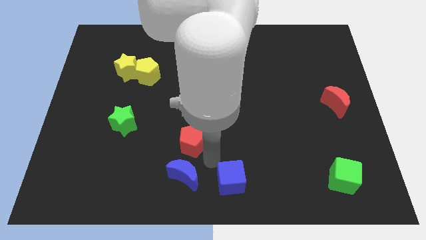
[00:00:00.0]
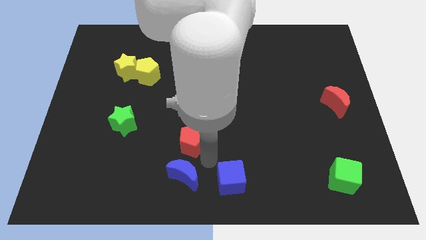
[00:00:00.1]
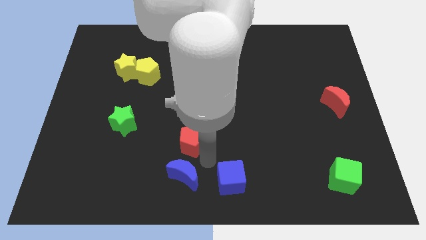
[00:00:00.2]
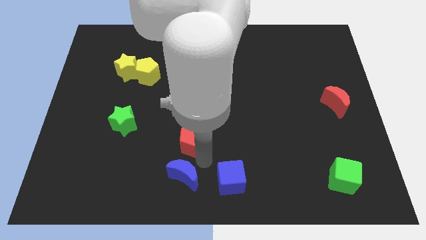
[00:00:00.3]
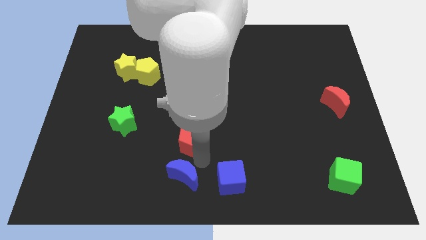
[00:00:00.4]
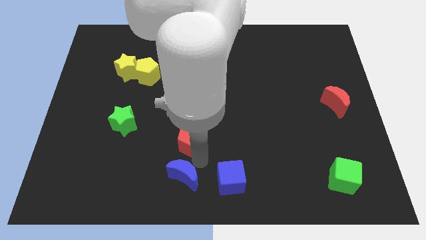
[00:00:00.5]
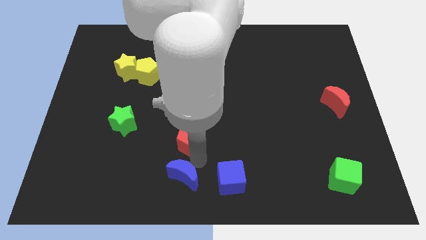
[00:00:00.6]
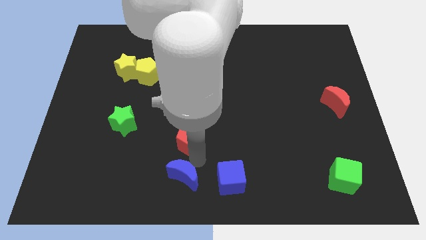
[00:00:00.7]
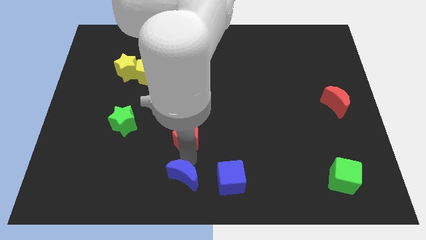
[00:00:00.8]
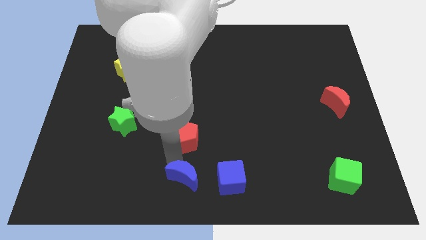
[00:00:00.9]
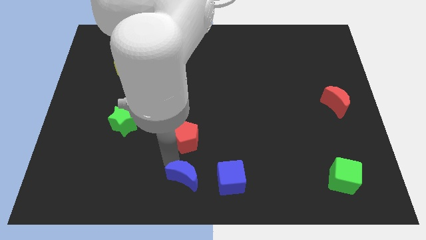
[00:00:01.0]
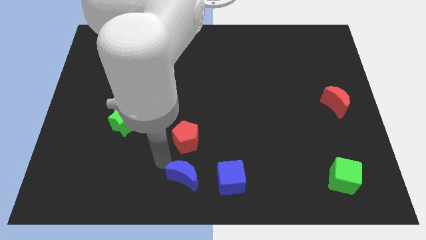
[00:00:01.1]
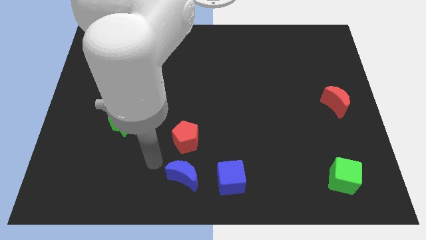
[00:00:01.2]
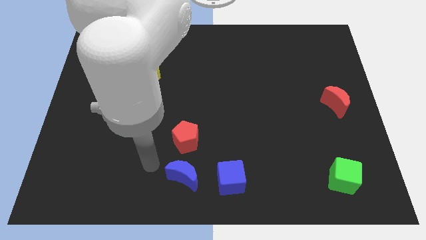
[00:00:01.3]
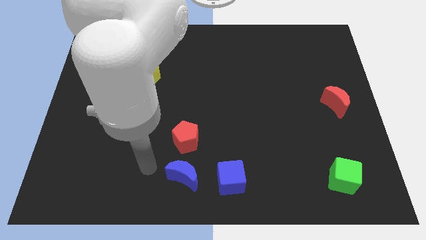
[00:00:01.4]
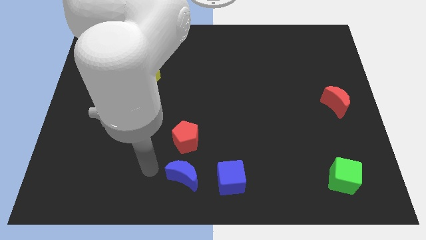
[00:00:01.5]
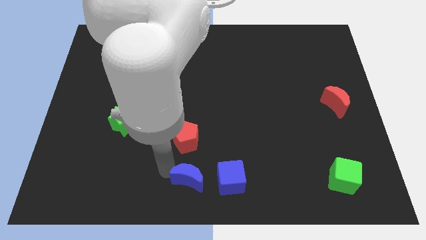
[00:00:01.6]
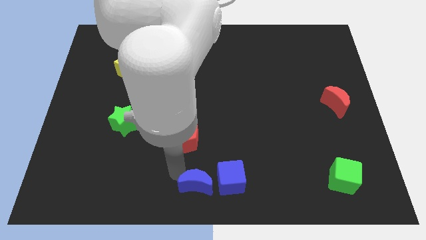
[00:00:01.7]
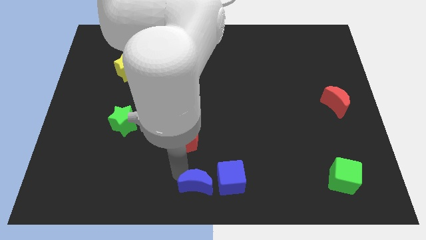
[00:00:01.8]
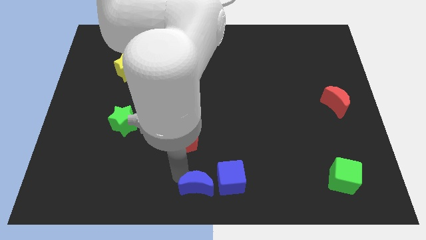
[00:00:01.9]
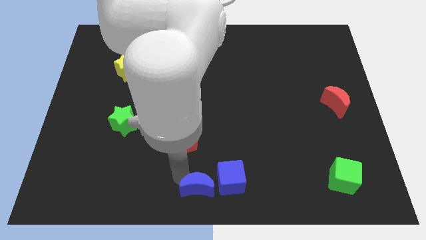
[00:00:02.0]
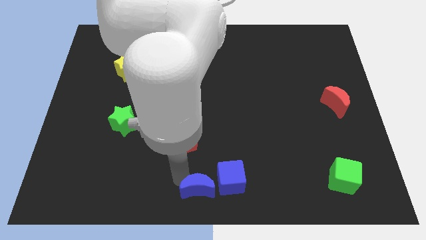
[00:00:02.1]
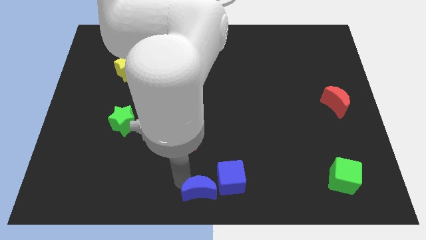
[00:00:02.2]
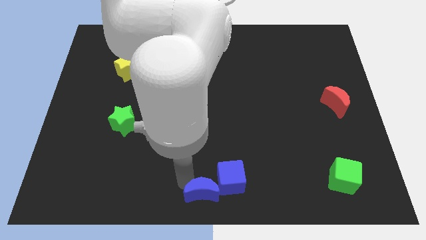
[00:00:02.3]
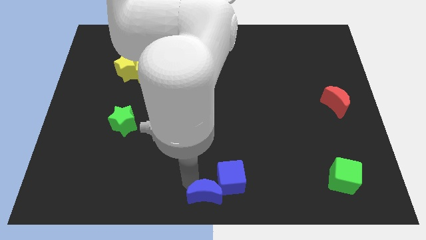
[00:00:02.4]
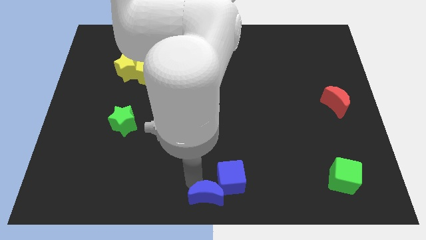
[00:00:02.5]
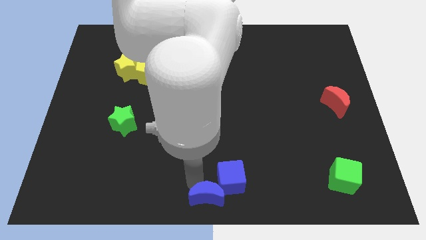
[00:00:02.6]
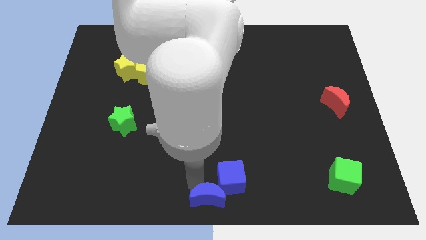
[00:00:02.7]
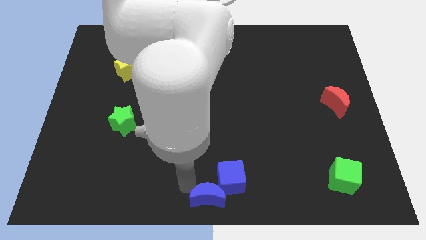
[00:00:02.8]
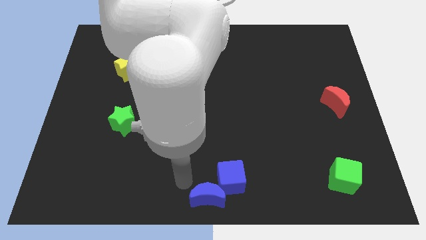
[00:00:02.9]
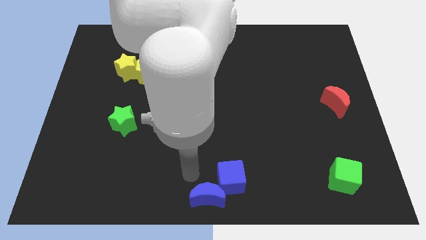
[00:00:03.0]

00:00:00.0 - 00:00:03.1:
place the blue crescent to the bottom left of the blue cube

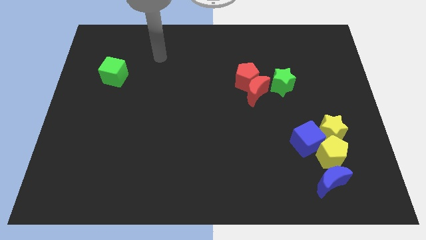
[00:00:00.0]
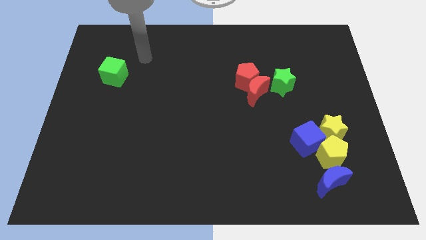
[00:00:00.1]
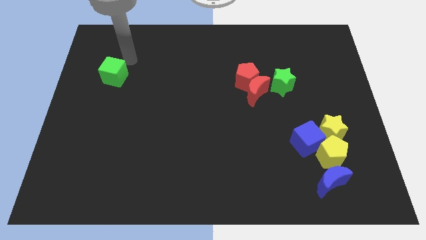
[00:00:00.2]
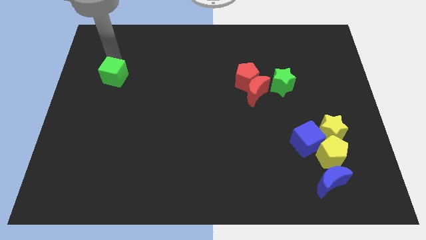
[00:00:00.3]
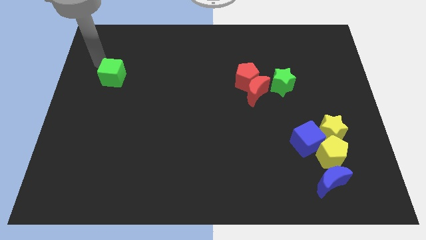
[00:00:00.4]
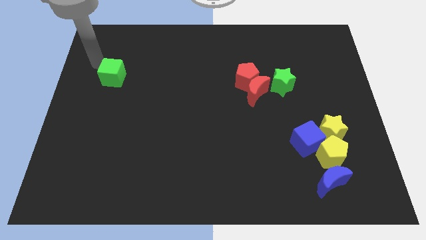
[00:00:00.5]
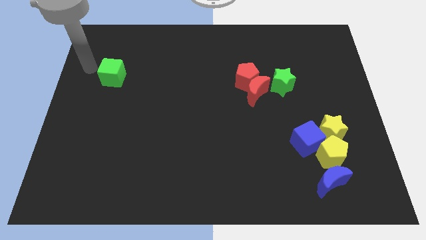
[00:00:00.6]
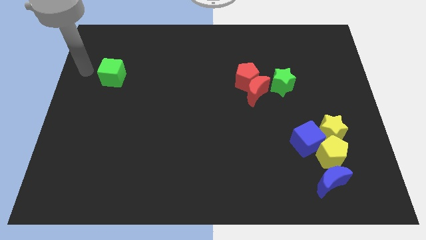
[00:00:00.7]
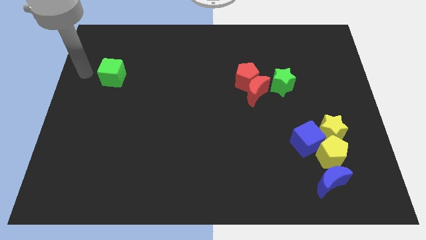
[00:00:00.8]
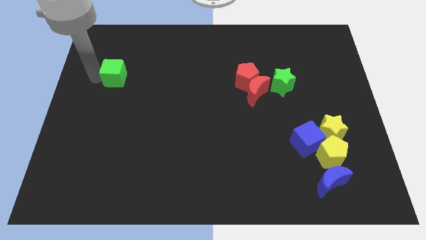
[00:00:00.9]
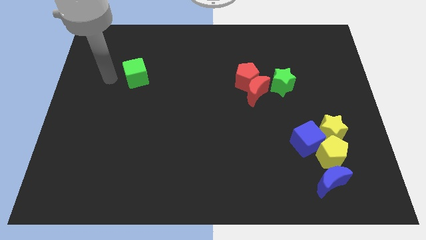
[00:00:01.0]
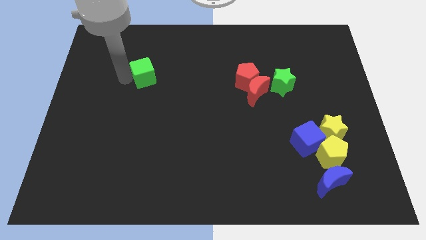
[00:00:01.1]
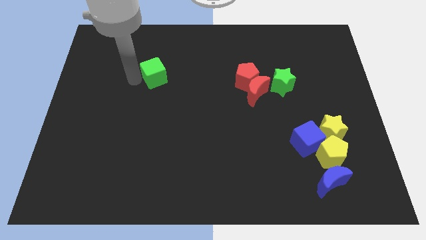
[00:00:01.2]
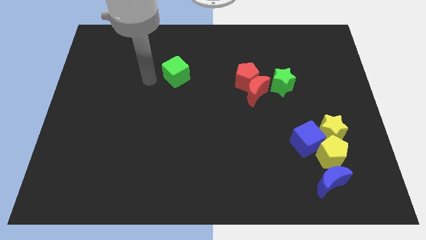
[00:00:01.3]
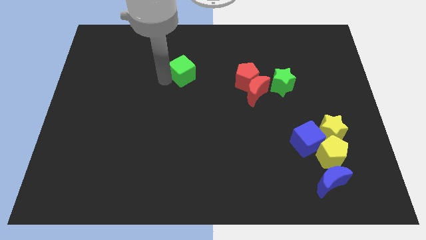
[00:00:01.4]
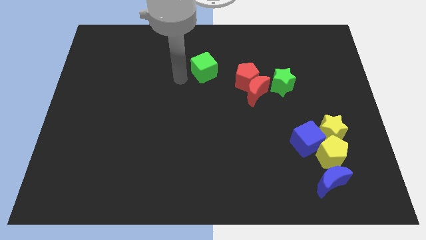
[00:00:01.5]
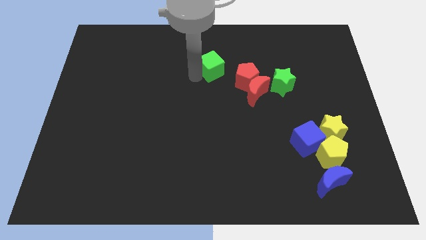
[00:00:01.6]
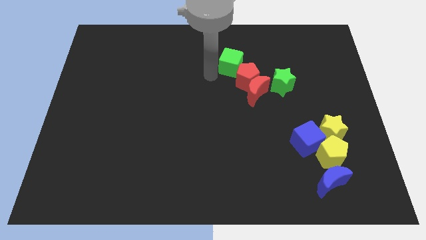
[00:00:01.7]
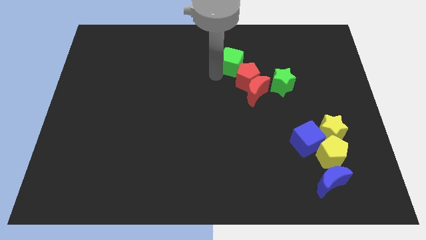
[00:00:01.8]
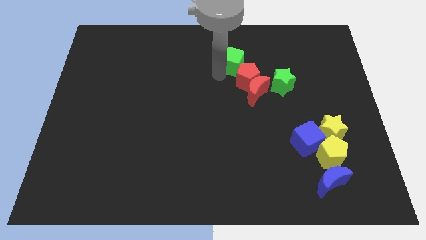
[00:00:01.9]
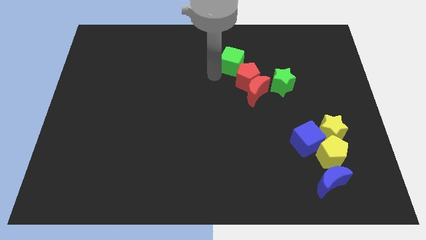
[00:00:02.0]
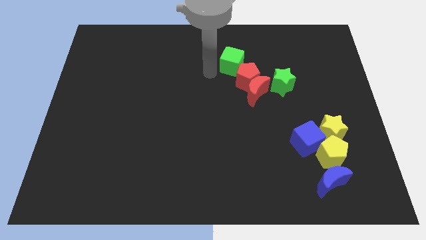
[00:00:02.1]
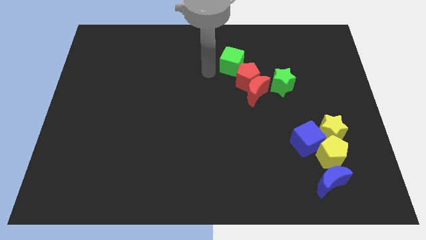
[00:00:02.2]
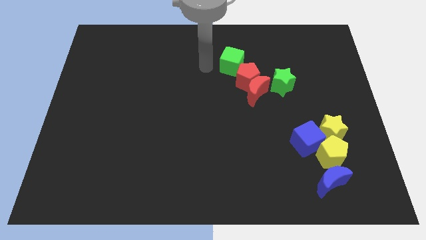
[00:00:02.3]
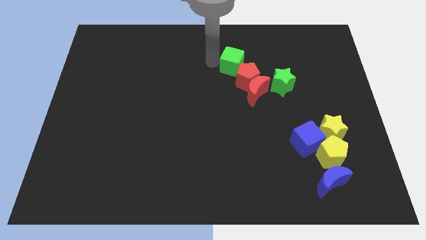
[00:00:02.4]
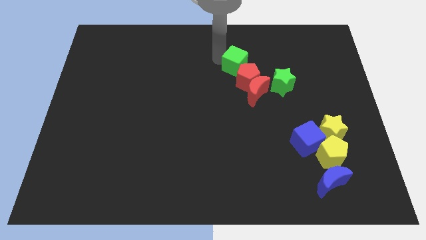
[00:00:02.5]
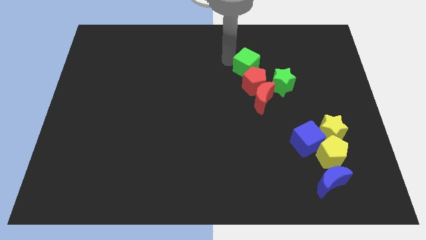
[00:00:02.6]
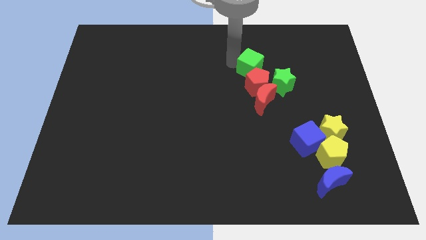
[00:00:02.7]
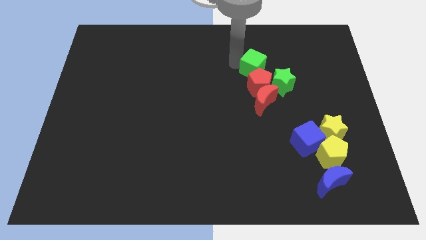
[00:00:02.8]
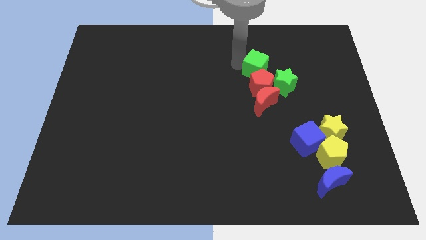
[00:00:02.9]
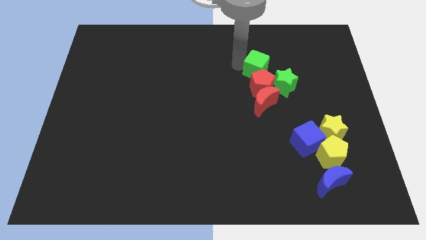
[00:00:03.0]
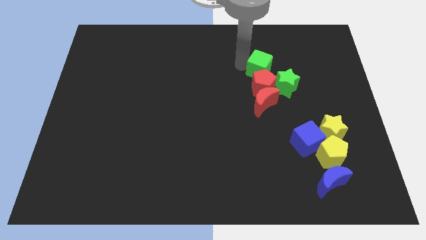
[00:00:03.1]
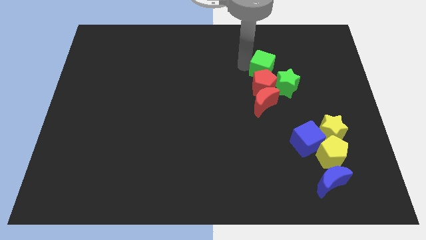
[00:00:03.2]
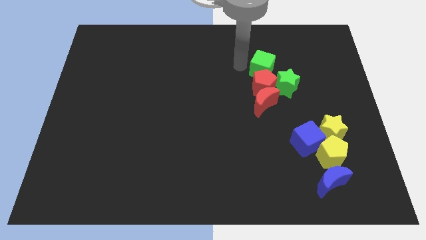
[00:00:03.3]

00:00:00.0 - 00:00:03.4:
place green cube on top of red pentagon

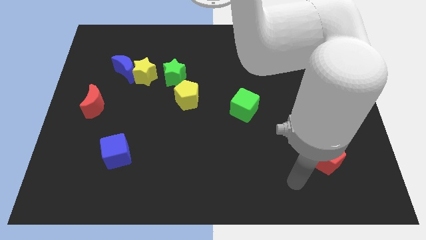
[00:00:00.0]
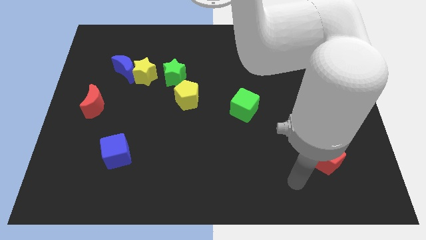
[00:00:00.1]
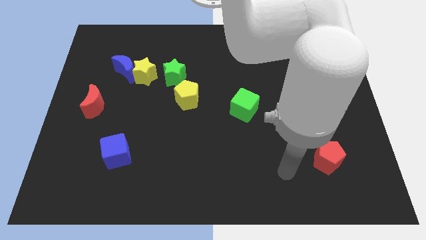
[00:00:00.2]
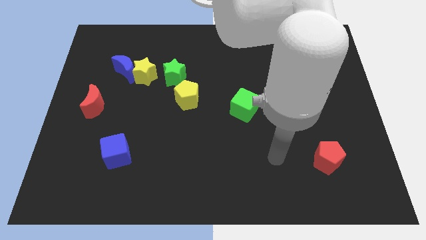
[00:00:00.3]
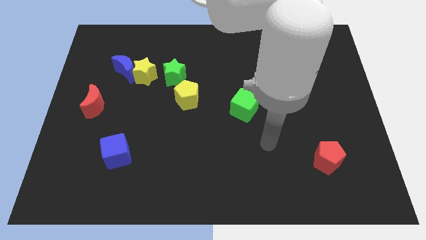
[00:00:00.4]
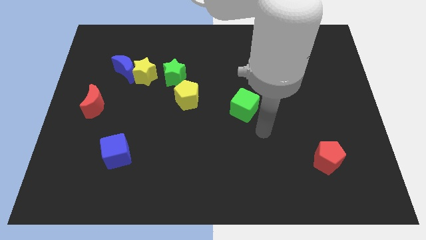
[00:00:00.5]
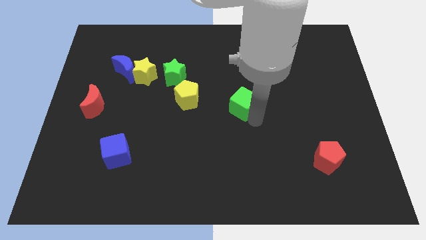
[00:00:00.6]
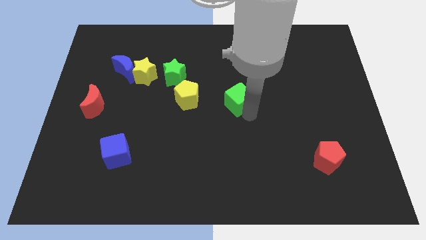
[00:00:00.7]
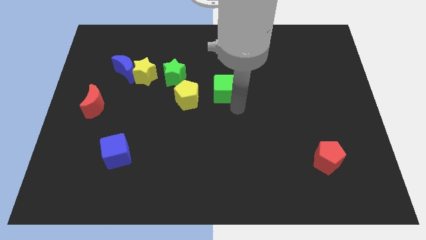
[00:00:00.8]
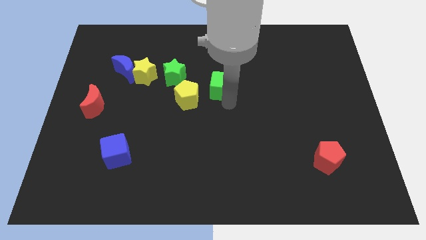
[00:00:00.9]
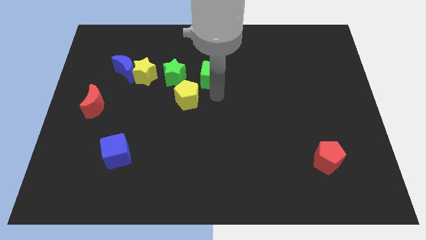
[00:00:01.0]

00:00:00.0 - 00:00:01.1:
place green cube to the top right of yellow pentagon

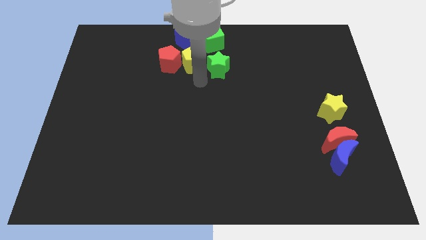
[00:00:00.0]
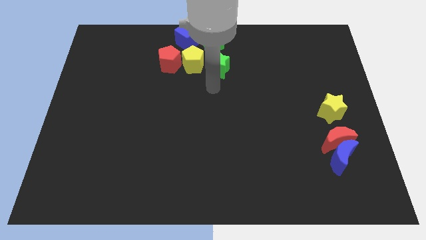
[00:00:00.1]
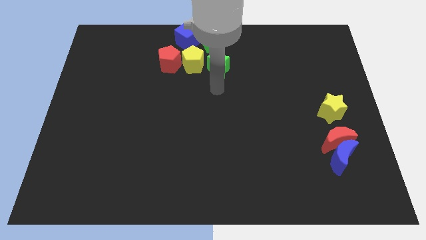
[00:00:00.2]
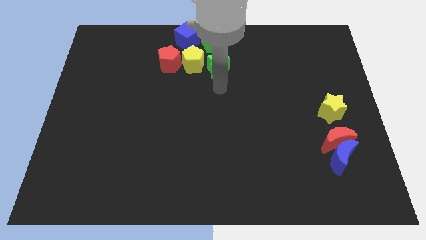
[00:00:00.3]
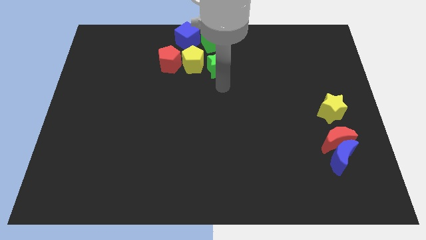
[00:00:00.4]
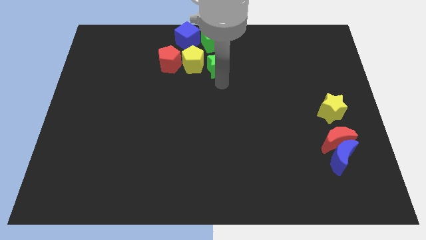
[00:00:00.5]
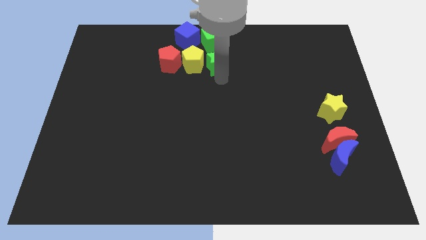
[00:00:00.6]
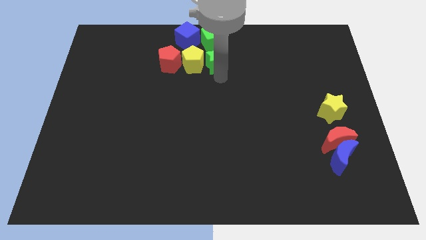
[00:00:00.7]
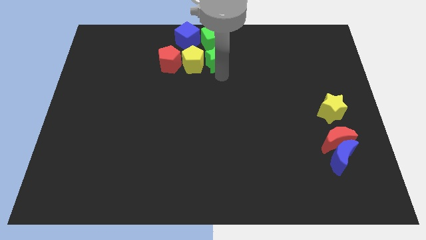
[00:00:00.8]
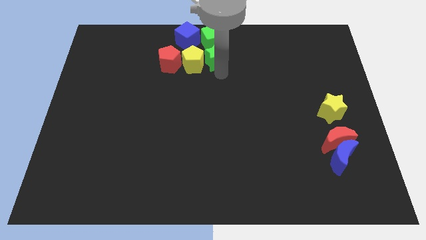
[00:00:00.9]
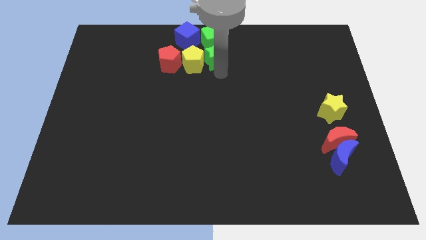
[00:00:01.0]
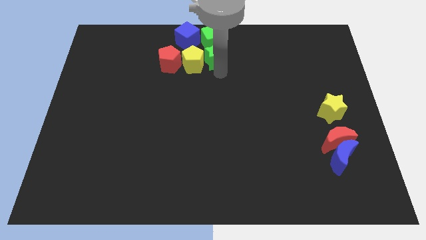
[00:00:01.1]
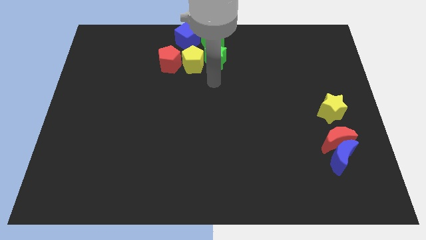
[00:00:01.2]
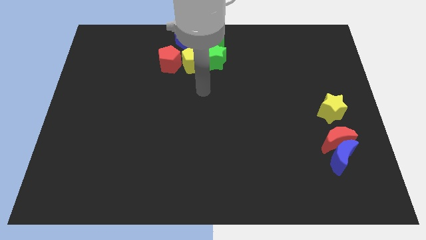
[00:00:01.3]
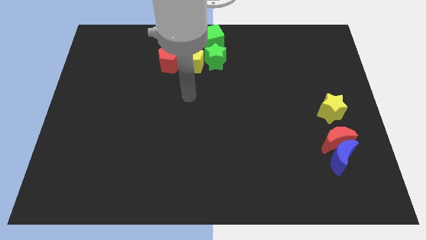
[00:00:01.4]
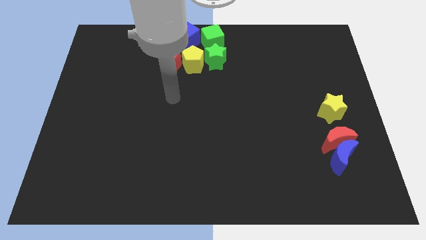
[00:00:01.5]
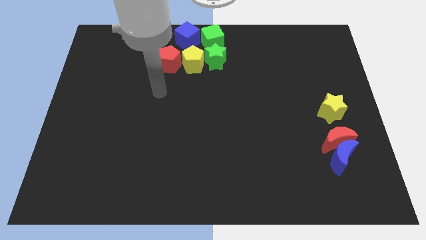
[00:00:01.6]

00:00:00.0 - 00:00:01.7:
push the green star into the green cube
